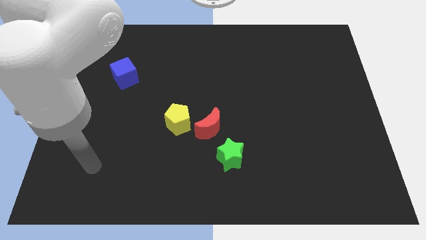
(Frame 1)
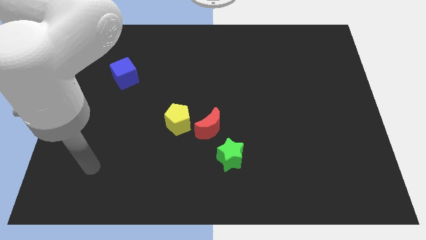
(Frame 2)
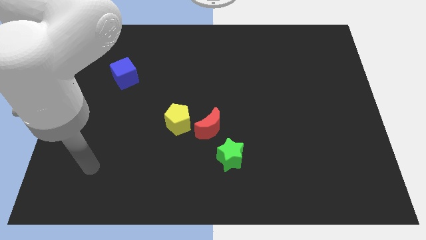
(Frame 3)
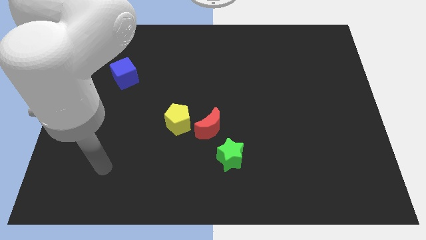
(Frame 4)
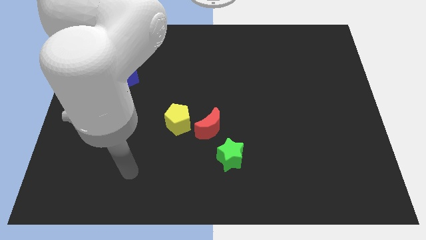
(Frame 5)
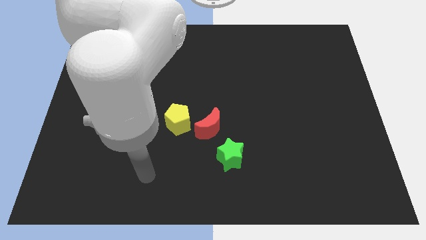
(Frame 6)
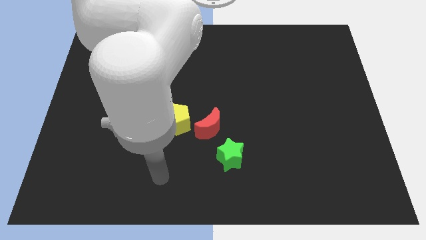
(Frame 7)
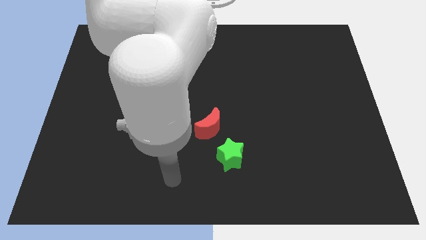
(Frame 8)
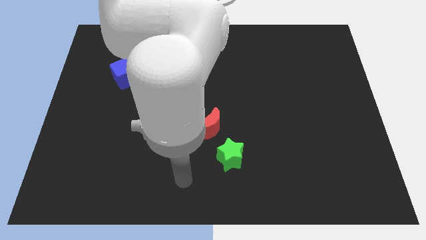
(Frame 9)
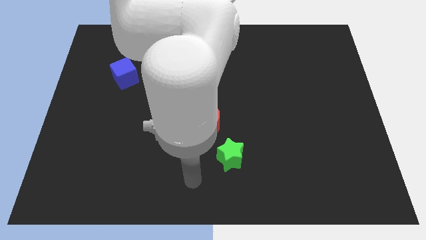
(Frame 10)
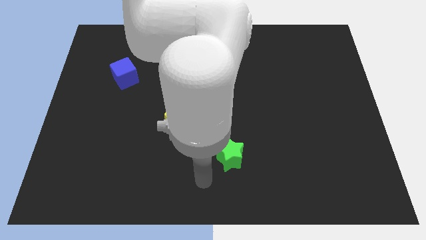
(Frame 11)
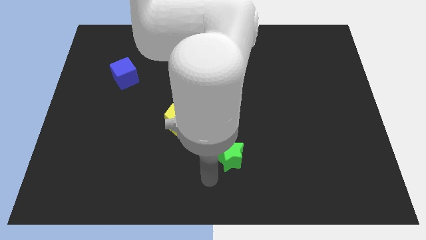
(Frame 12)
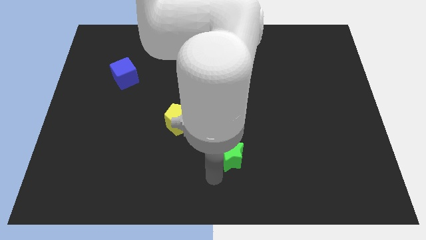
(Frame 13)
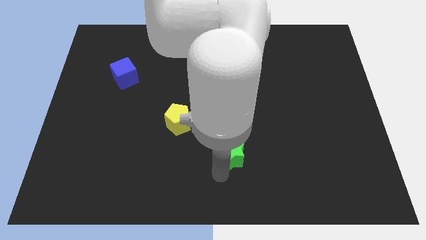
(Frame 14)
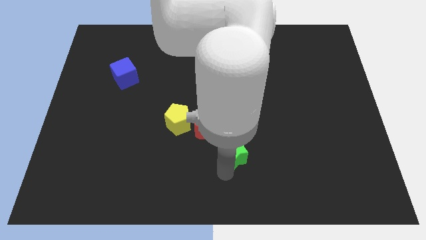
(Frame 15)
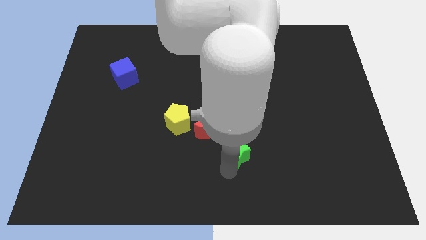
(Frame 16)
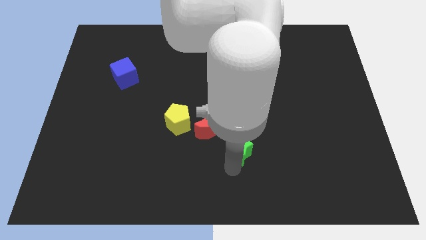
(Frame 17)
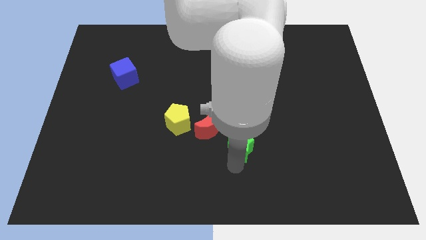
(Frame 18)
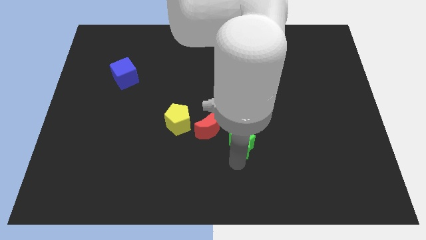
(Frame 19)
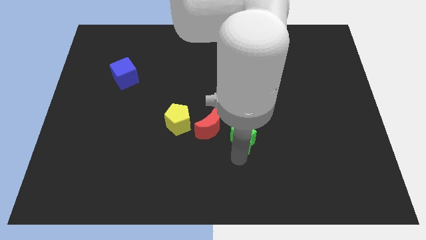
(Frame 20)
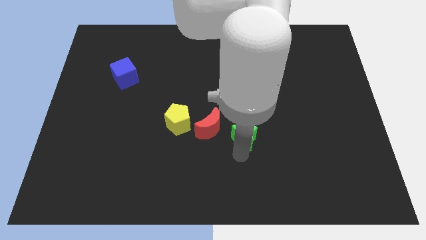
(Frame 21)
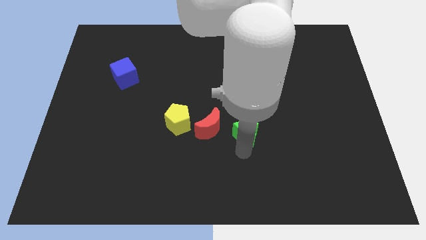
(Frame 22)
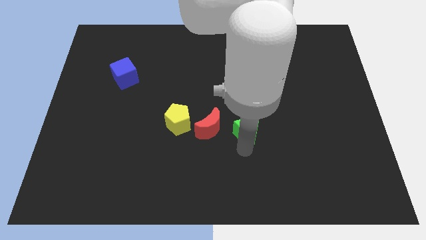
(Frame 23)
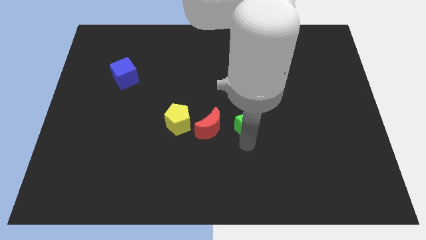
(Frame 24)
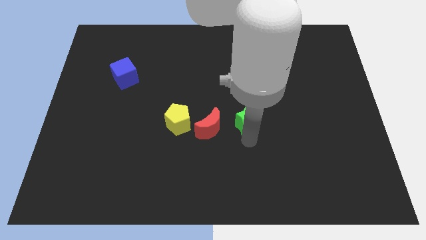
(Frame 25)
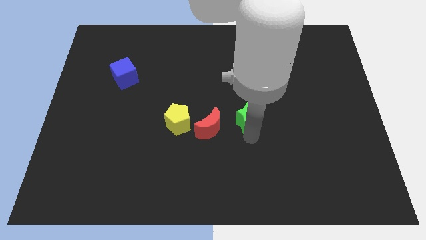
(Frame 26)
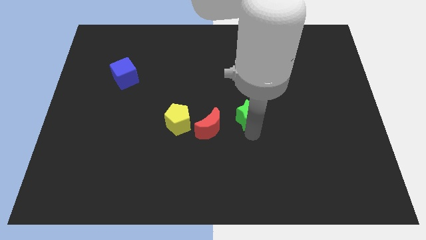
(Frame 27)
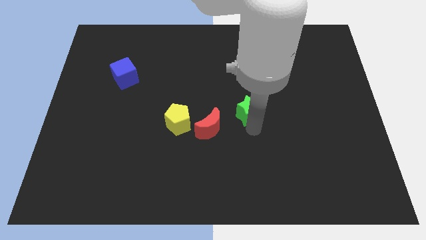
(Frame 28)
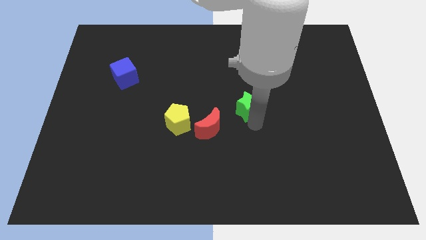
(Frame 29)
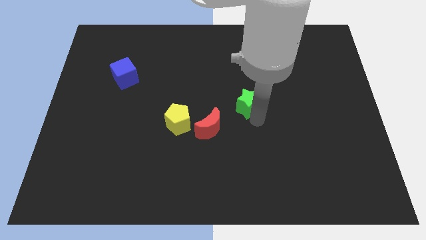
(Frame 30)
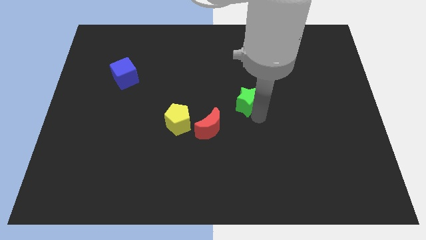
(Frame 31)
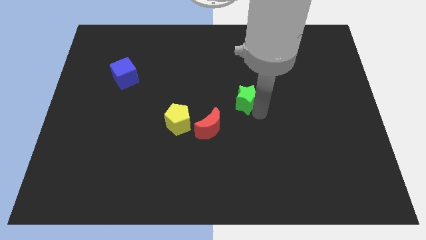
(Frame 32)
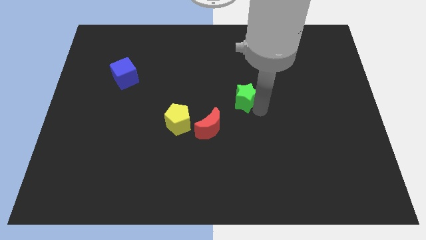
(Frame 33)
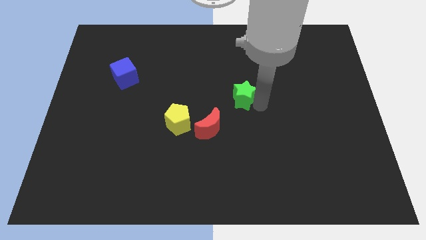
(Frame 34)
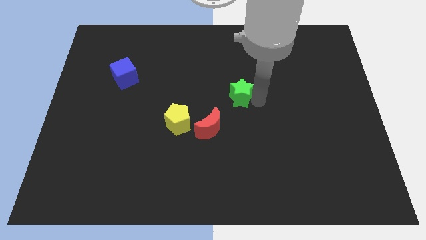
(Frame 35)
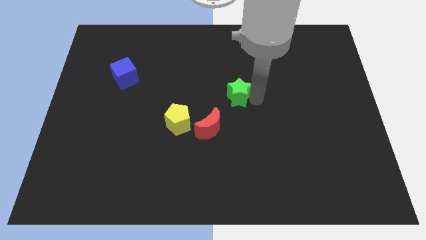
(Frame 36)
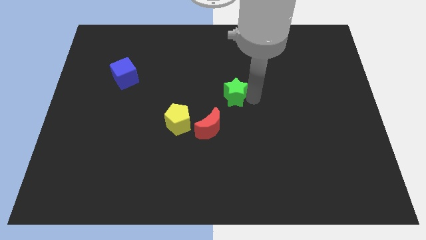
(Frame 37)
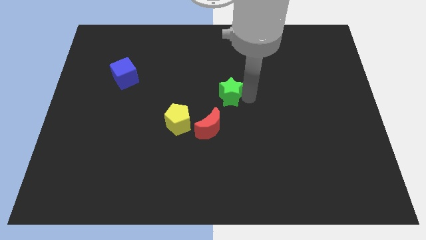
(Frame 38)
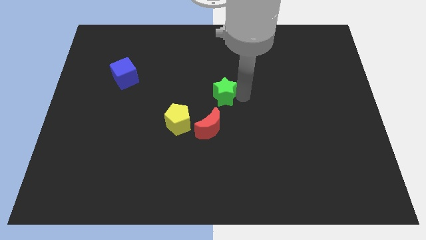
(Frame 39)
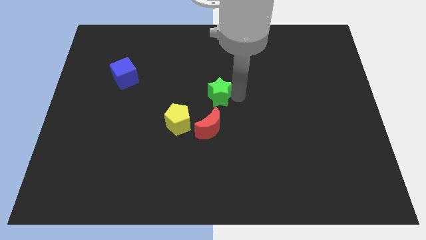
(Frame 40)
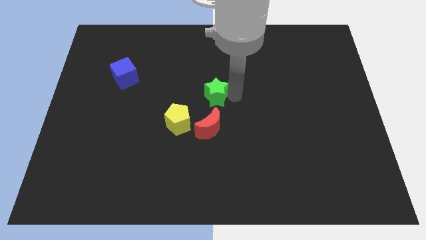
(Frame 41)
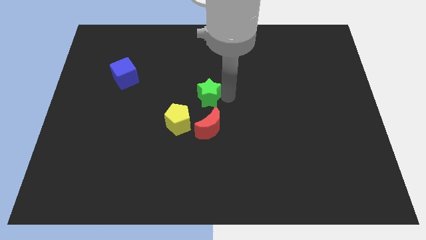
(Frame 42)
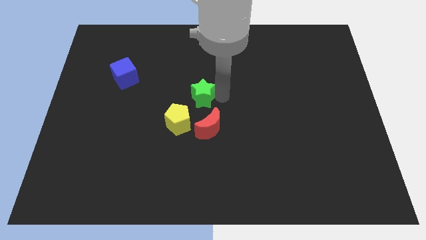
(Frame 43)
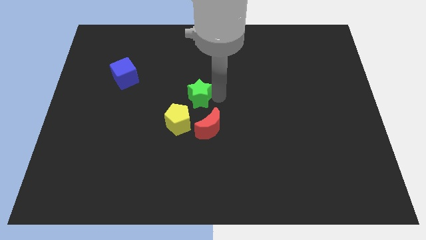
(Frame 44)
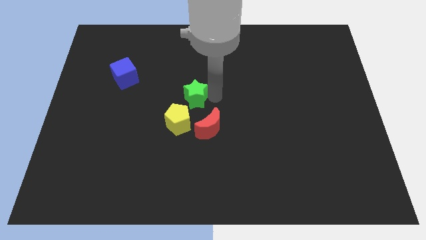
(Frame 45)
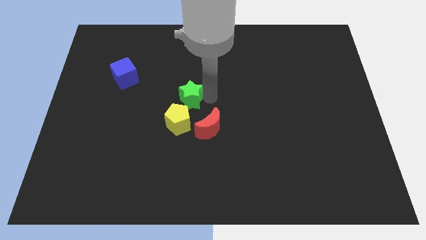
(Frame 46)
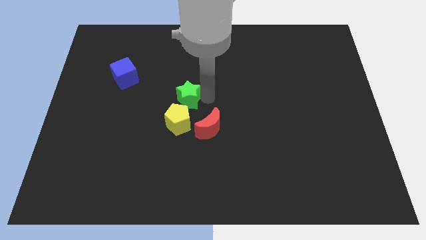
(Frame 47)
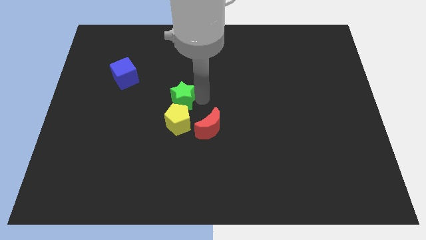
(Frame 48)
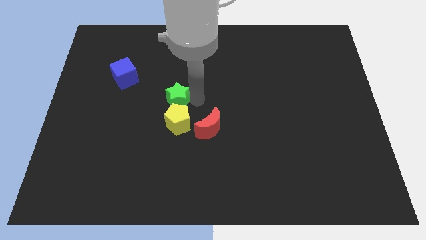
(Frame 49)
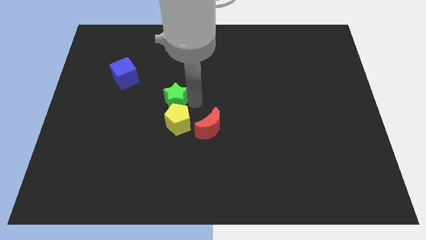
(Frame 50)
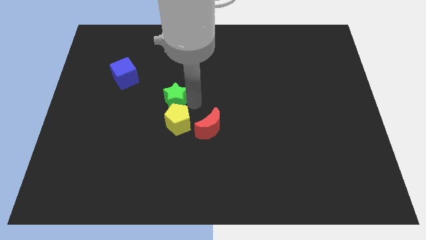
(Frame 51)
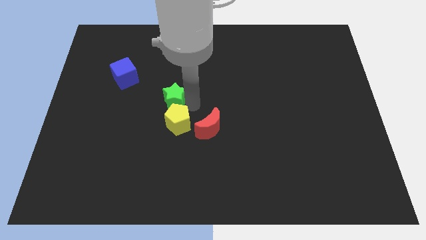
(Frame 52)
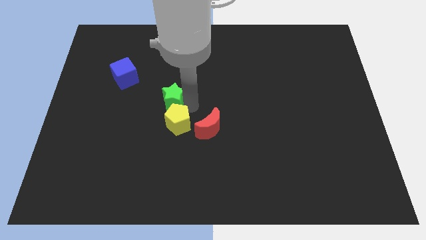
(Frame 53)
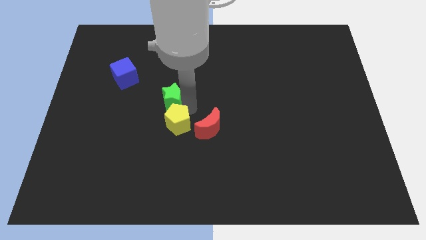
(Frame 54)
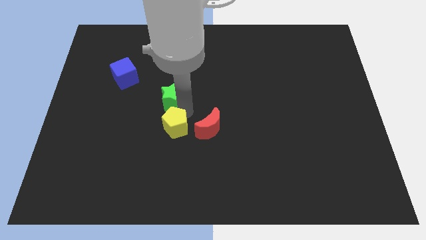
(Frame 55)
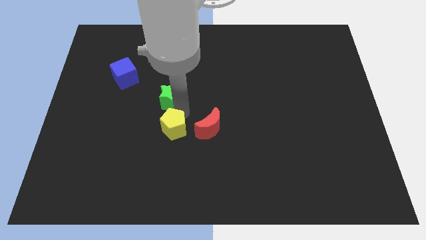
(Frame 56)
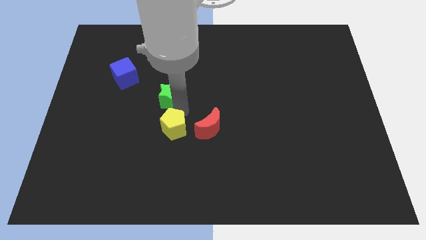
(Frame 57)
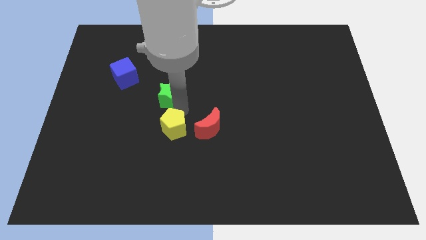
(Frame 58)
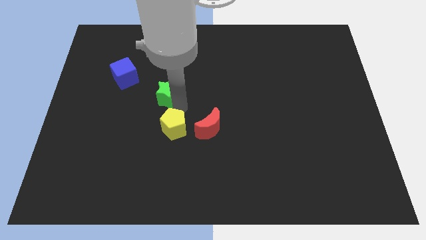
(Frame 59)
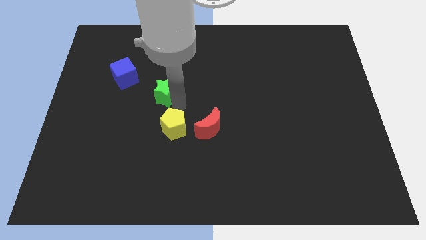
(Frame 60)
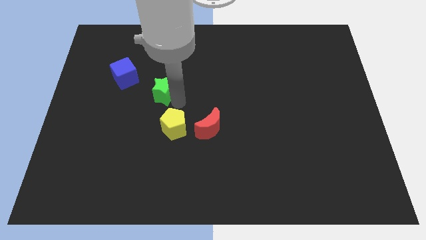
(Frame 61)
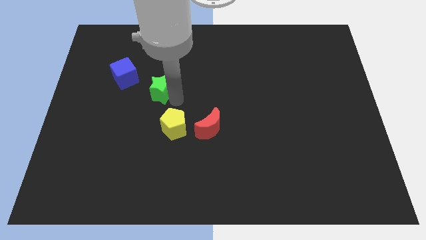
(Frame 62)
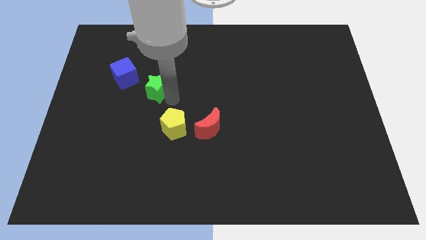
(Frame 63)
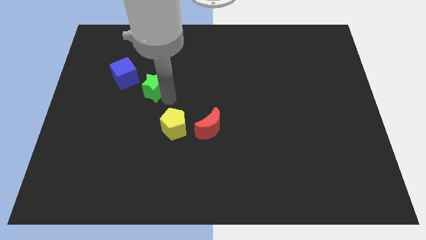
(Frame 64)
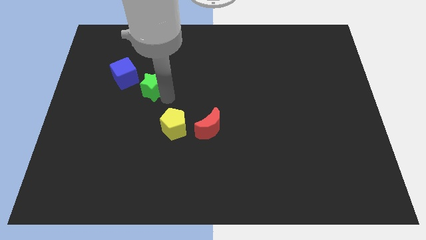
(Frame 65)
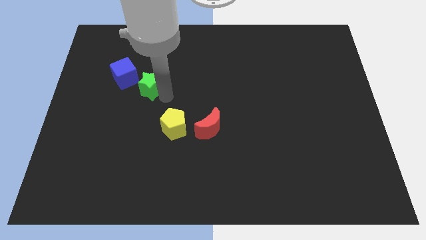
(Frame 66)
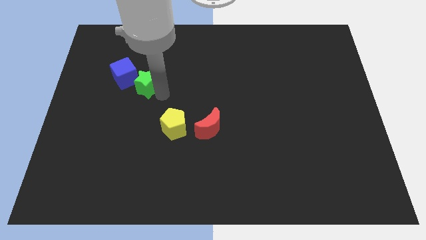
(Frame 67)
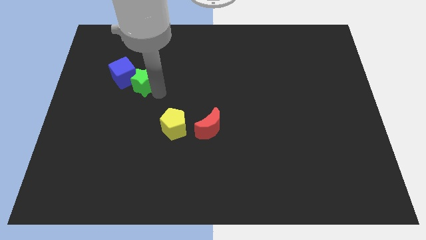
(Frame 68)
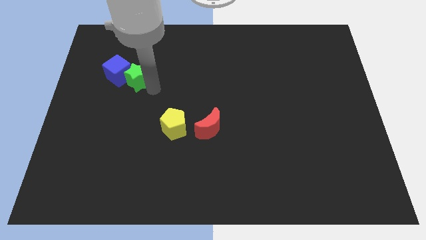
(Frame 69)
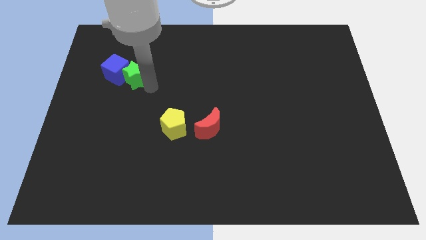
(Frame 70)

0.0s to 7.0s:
move the green block to the blue cube

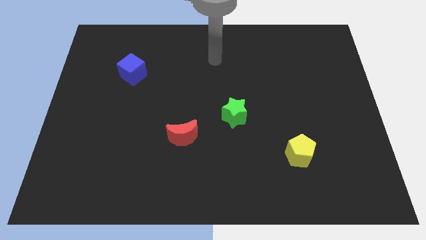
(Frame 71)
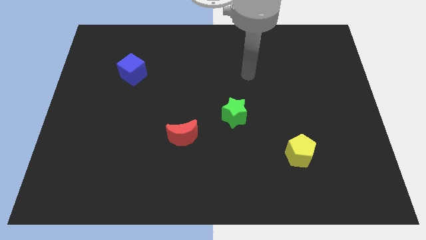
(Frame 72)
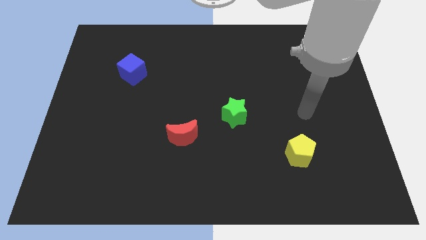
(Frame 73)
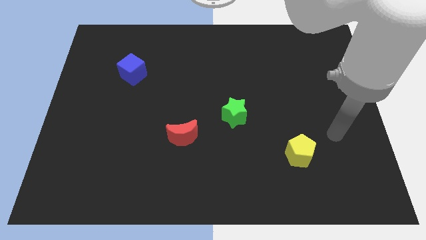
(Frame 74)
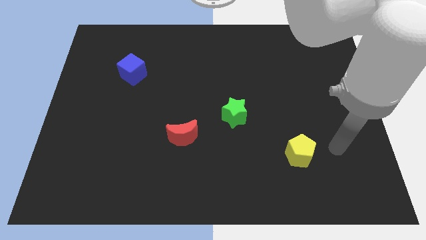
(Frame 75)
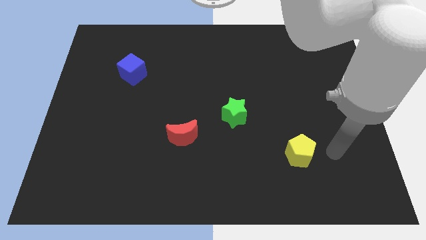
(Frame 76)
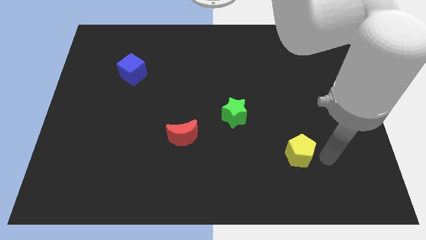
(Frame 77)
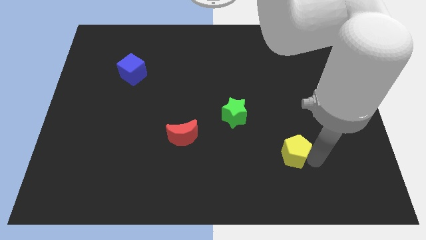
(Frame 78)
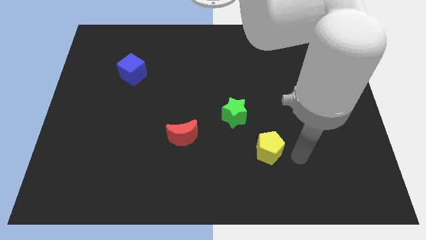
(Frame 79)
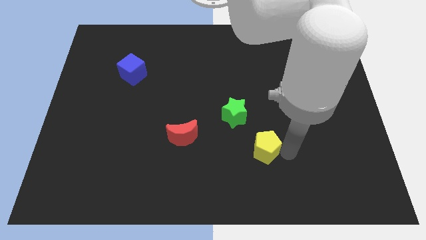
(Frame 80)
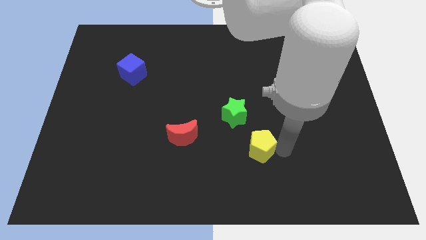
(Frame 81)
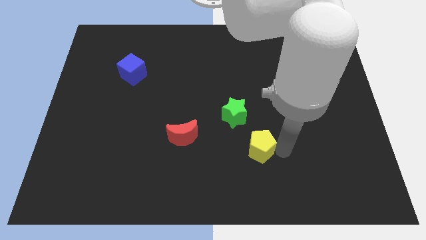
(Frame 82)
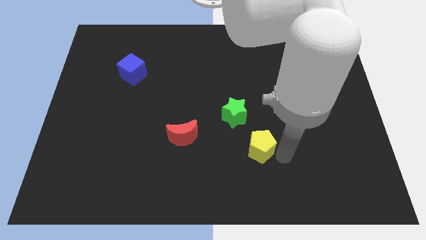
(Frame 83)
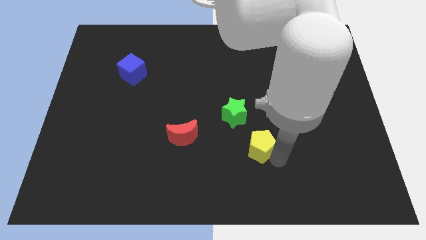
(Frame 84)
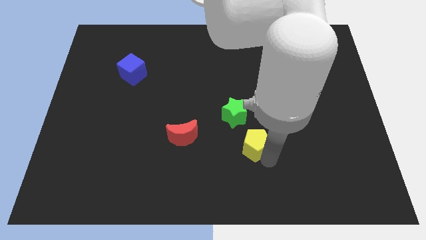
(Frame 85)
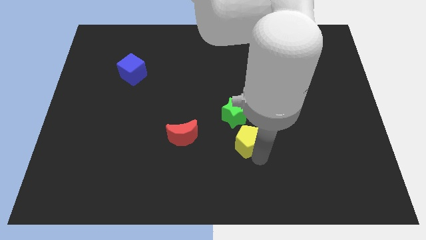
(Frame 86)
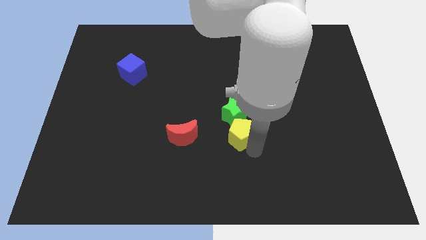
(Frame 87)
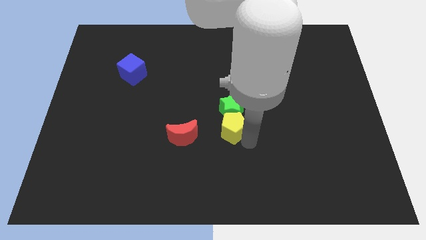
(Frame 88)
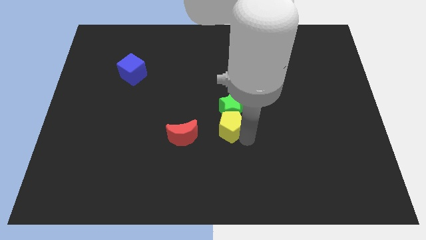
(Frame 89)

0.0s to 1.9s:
slide the yellow pentagon to the green star
